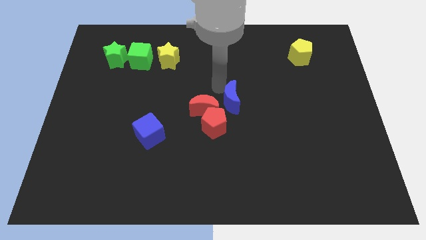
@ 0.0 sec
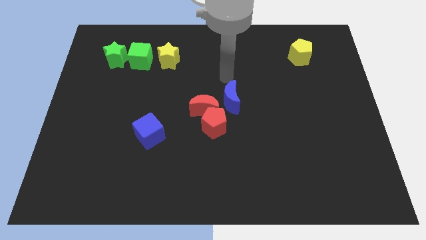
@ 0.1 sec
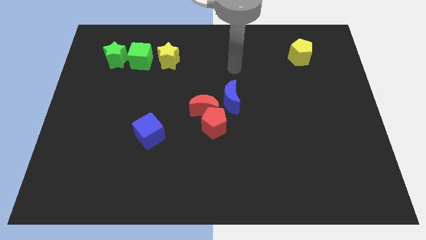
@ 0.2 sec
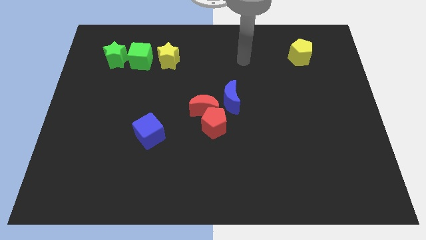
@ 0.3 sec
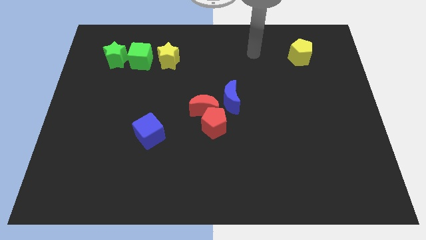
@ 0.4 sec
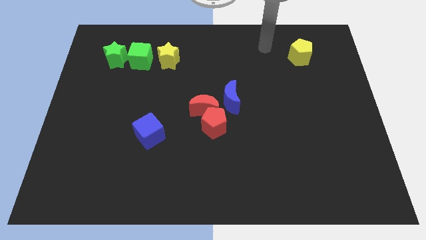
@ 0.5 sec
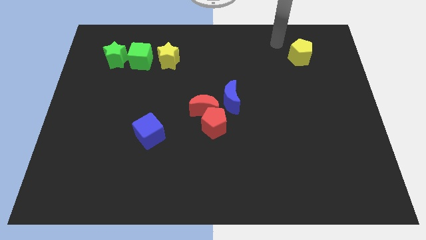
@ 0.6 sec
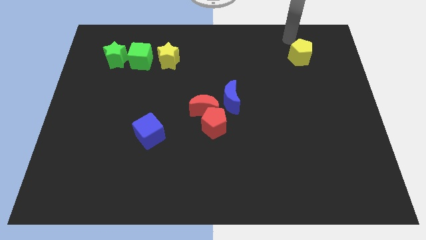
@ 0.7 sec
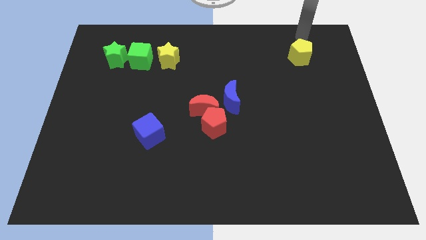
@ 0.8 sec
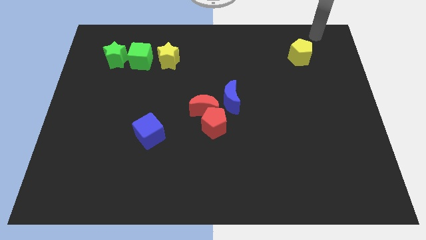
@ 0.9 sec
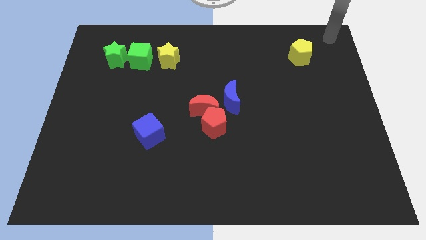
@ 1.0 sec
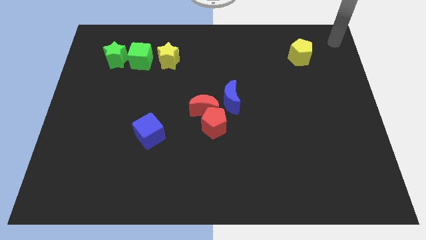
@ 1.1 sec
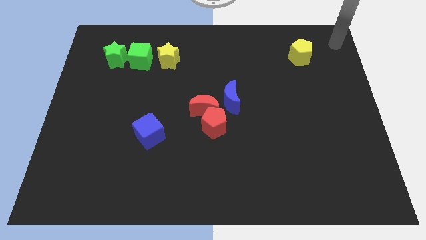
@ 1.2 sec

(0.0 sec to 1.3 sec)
move your arm towards the top right corner of the board

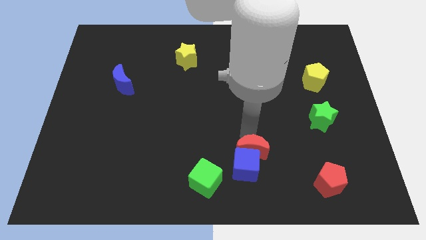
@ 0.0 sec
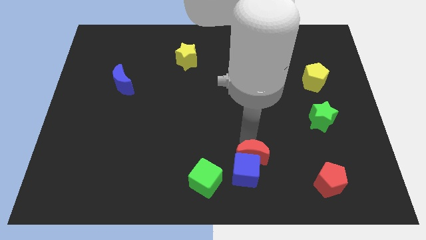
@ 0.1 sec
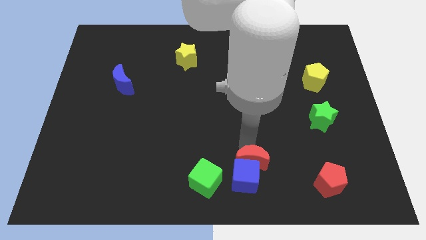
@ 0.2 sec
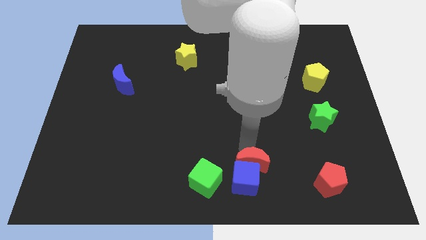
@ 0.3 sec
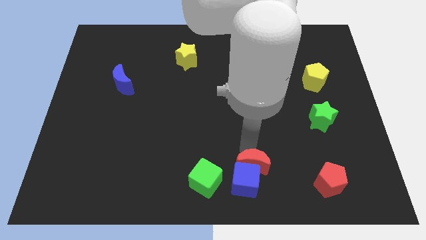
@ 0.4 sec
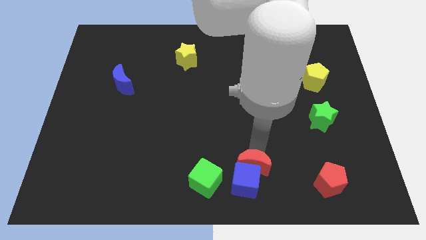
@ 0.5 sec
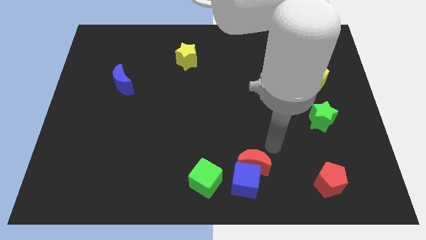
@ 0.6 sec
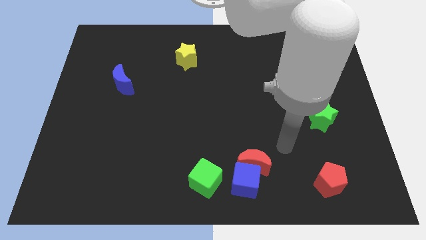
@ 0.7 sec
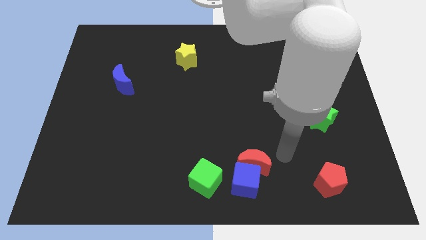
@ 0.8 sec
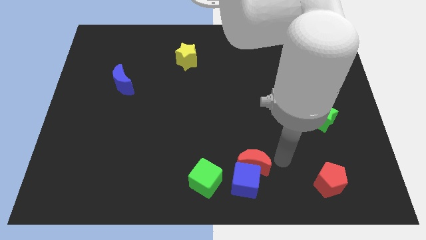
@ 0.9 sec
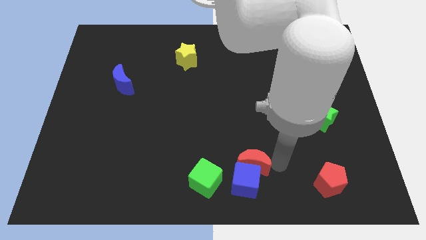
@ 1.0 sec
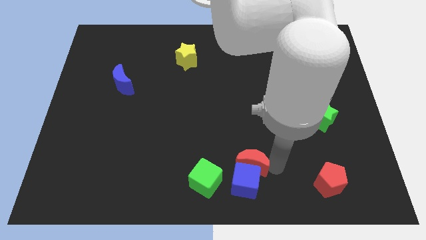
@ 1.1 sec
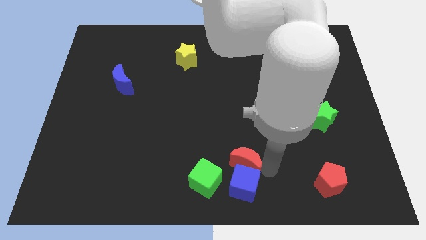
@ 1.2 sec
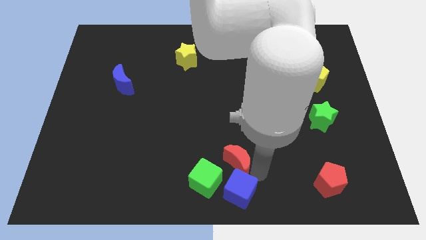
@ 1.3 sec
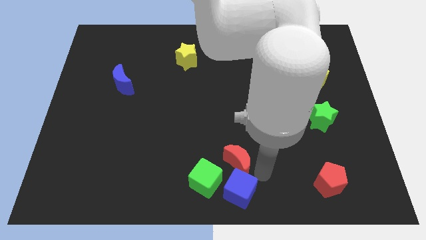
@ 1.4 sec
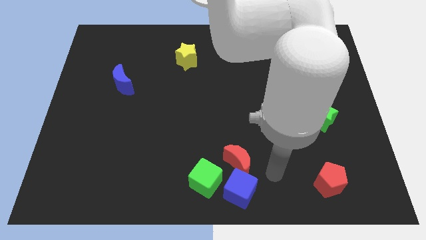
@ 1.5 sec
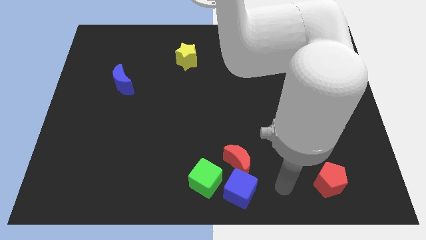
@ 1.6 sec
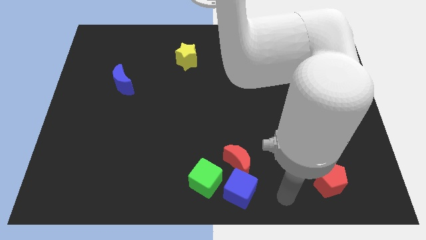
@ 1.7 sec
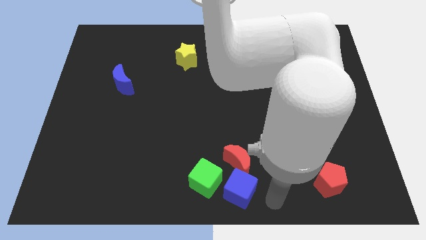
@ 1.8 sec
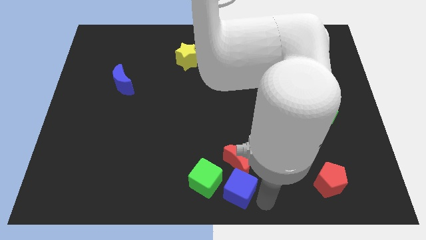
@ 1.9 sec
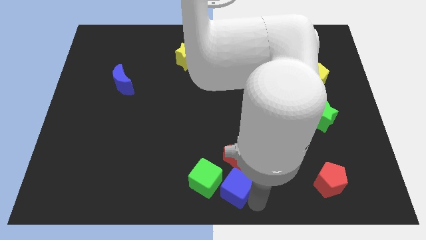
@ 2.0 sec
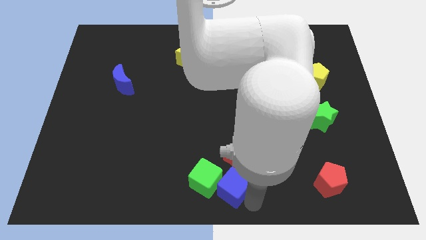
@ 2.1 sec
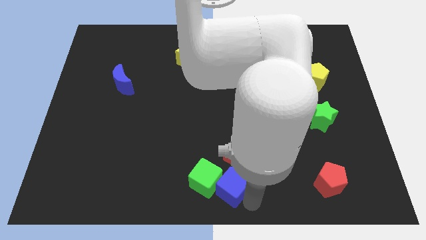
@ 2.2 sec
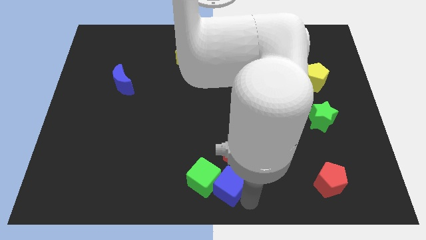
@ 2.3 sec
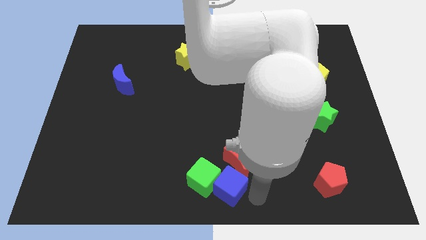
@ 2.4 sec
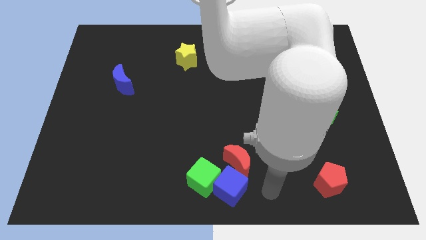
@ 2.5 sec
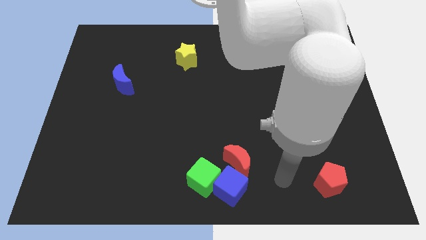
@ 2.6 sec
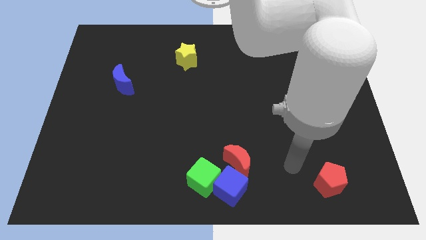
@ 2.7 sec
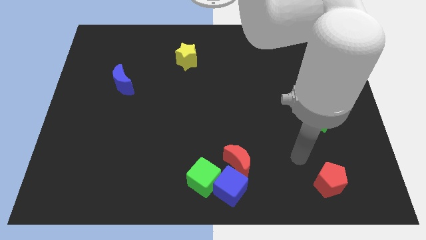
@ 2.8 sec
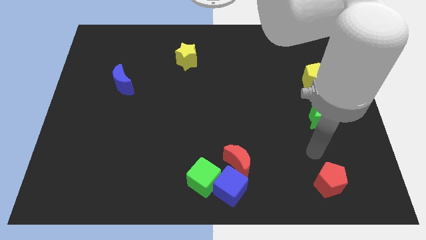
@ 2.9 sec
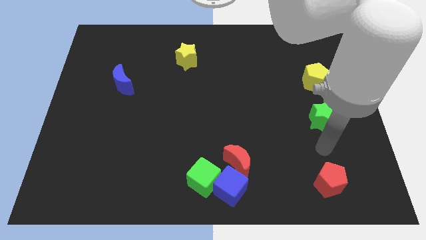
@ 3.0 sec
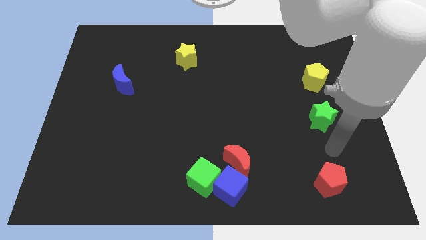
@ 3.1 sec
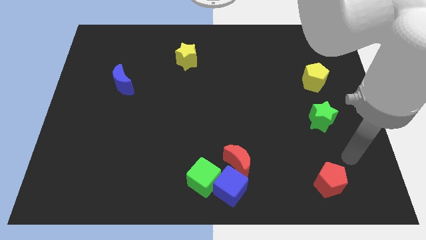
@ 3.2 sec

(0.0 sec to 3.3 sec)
push the blue cube into green cube

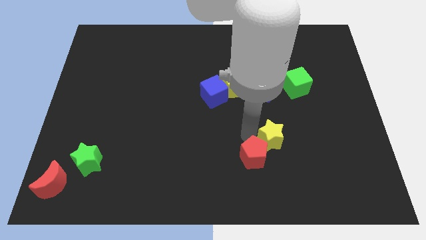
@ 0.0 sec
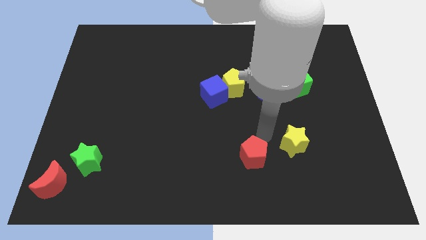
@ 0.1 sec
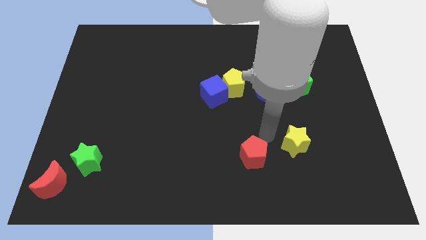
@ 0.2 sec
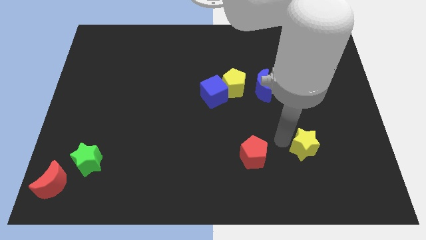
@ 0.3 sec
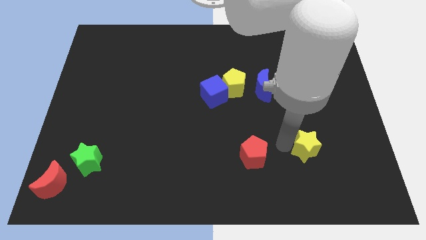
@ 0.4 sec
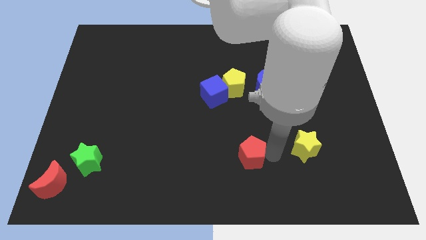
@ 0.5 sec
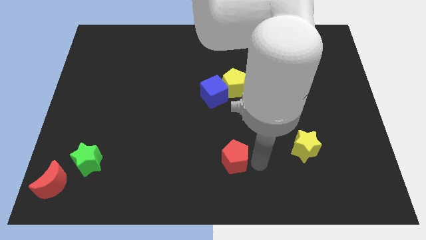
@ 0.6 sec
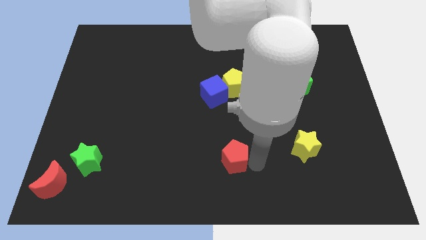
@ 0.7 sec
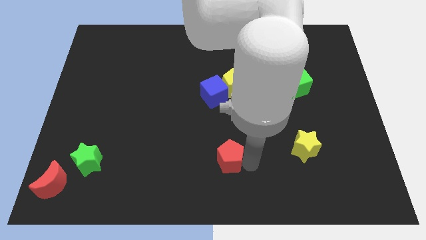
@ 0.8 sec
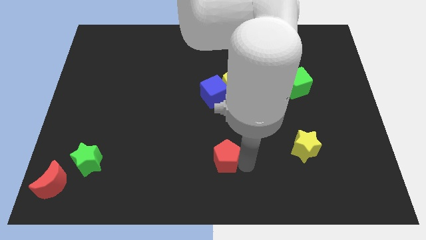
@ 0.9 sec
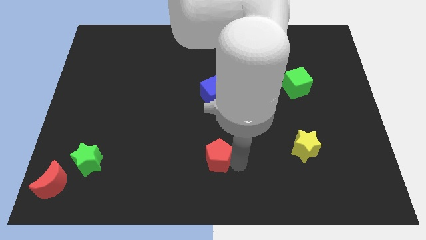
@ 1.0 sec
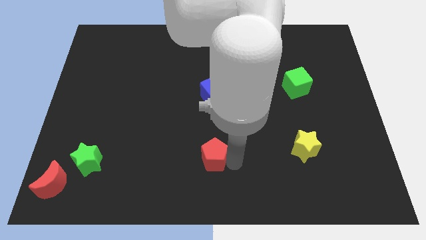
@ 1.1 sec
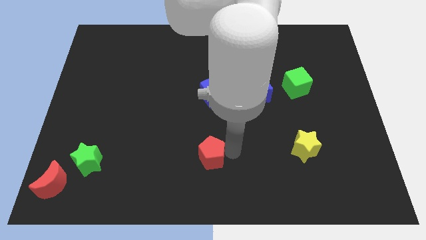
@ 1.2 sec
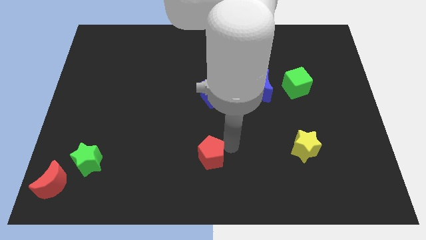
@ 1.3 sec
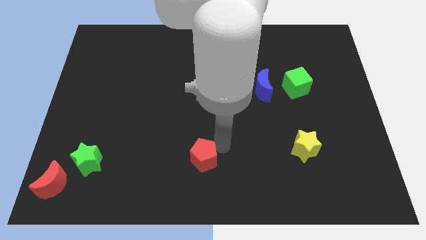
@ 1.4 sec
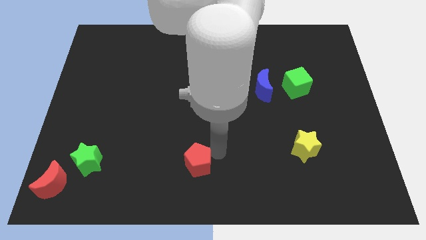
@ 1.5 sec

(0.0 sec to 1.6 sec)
separate yellow star and red pentagon

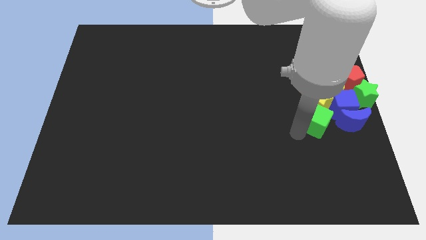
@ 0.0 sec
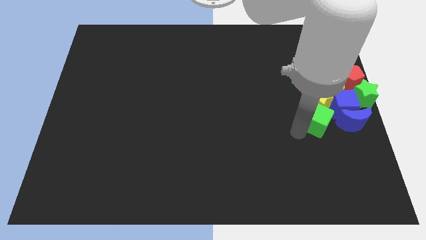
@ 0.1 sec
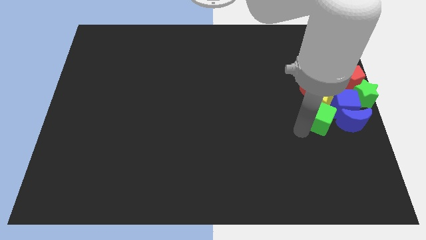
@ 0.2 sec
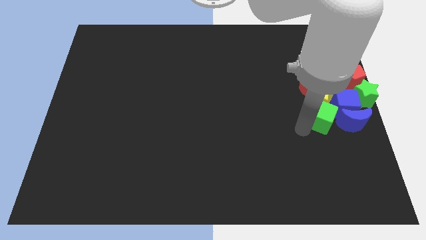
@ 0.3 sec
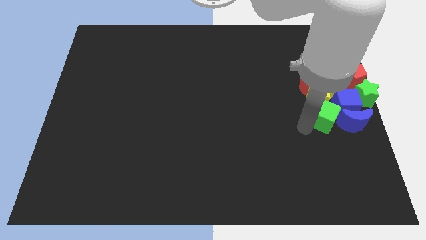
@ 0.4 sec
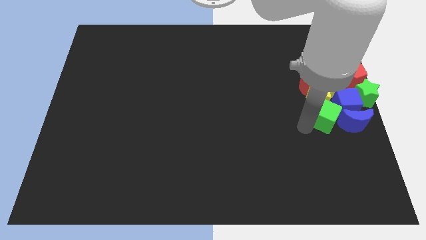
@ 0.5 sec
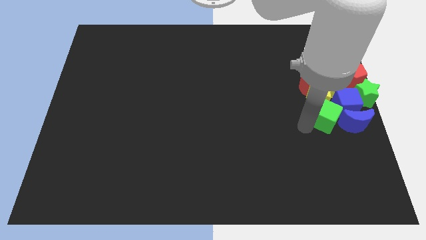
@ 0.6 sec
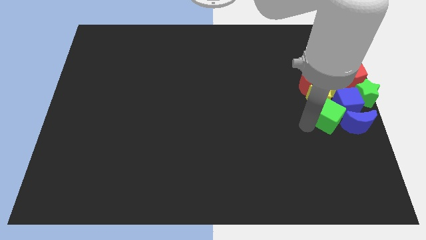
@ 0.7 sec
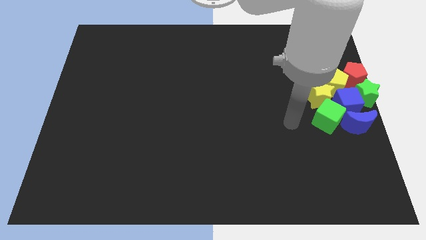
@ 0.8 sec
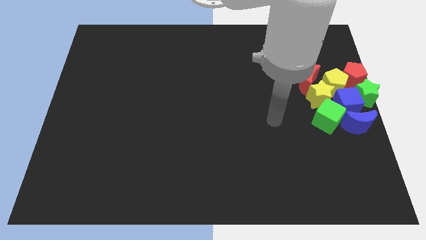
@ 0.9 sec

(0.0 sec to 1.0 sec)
adjust the green cube into the group of blocks

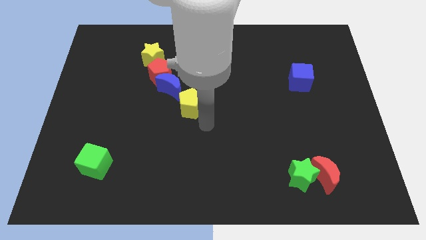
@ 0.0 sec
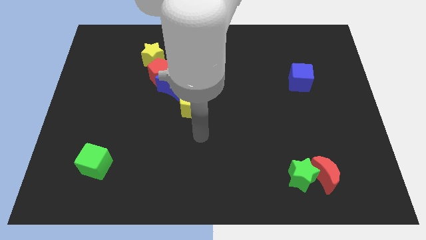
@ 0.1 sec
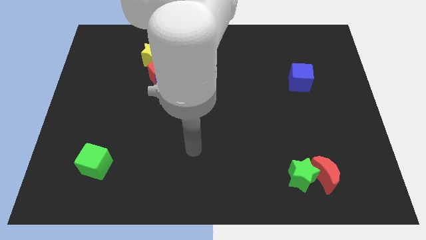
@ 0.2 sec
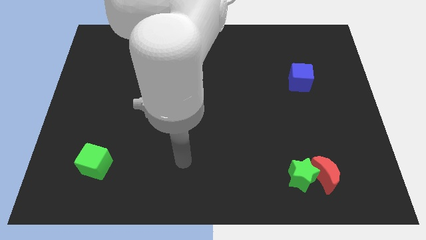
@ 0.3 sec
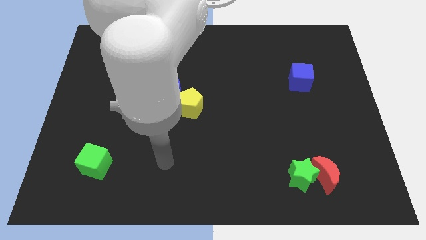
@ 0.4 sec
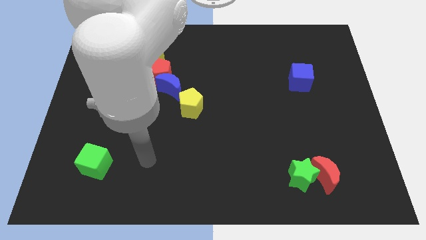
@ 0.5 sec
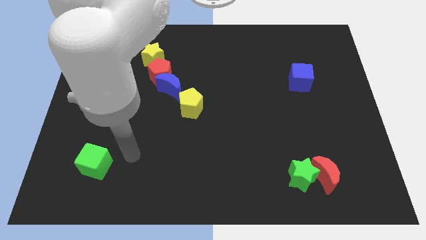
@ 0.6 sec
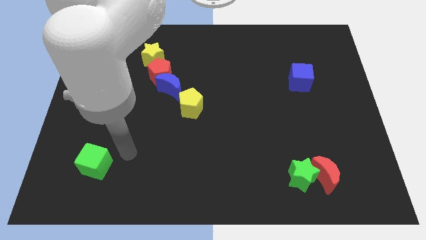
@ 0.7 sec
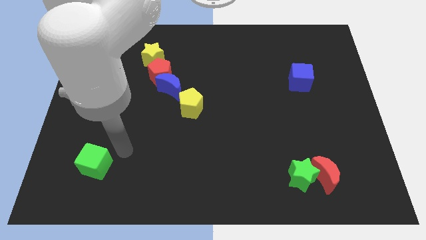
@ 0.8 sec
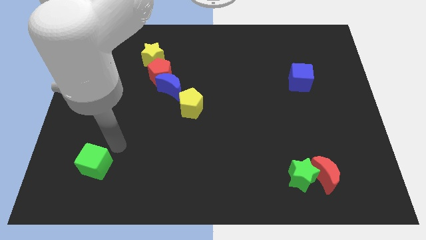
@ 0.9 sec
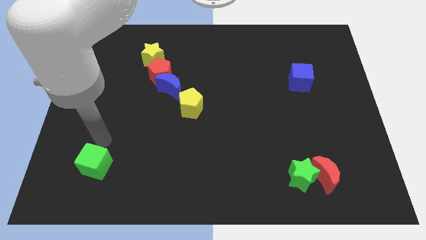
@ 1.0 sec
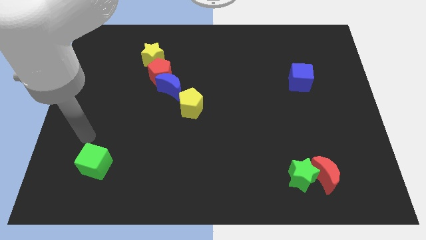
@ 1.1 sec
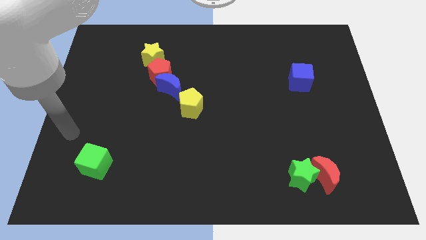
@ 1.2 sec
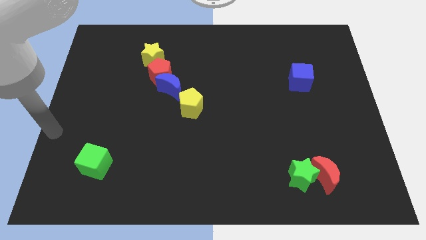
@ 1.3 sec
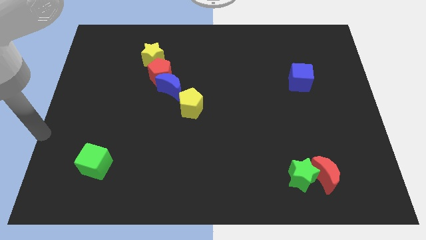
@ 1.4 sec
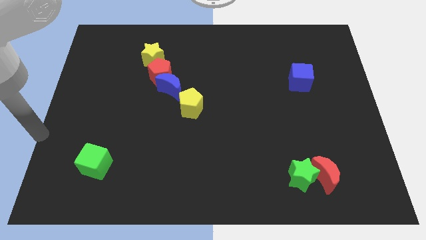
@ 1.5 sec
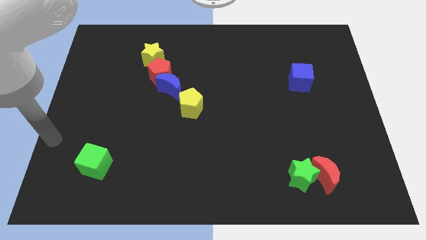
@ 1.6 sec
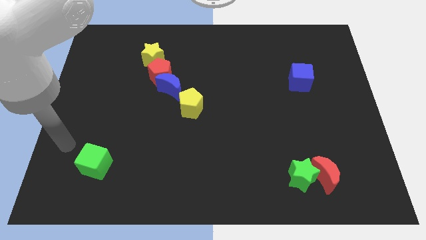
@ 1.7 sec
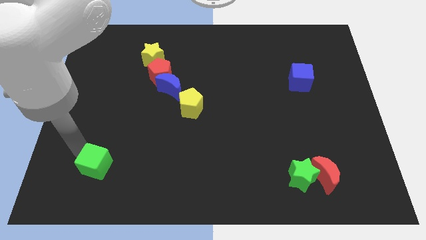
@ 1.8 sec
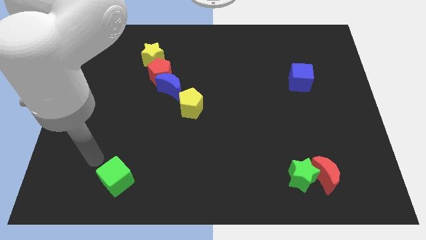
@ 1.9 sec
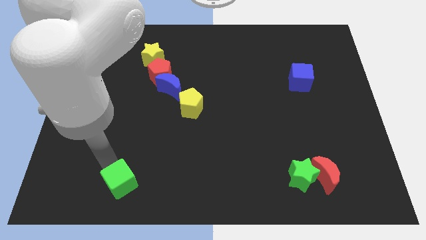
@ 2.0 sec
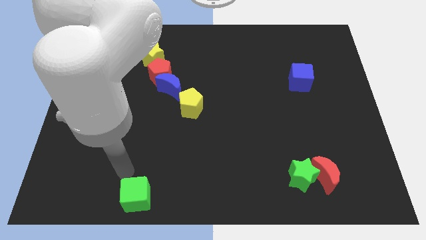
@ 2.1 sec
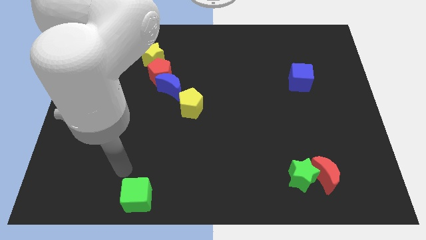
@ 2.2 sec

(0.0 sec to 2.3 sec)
slide the green cube to the bottom side
